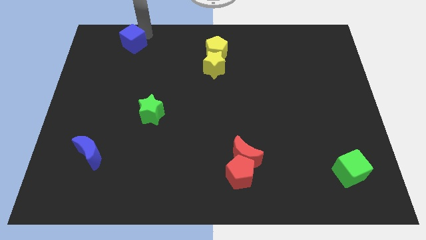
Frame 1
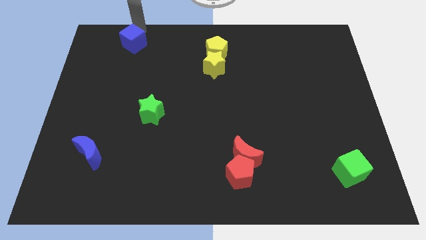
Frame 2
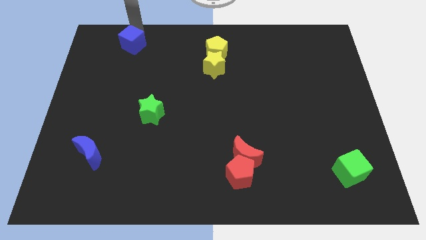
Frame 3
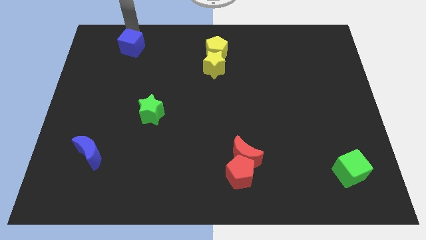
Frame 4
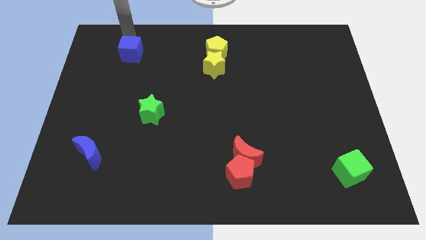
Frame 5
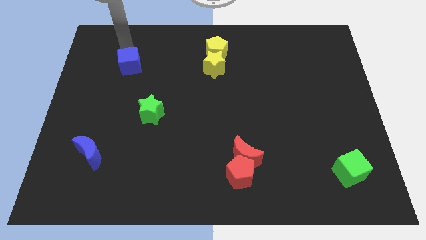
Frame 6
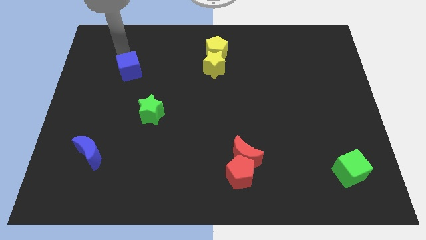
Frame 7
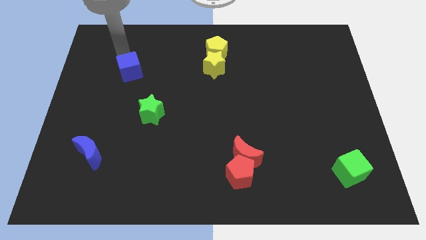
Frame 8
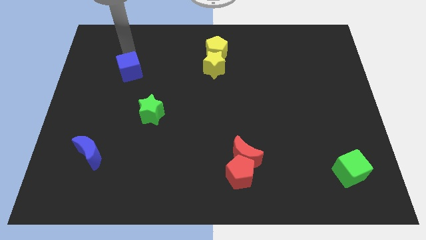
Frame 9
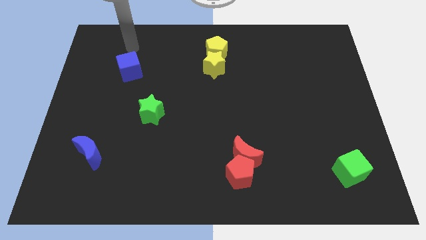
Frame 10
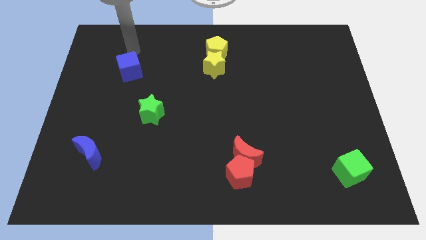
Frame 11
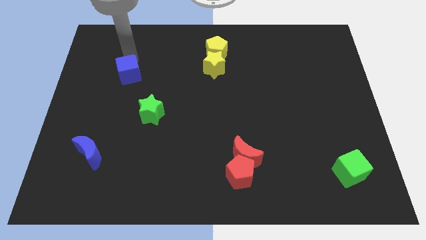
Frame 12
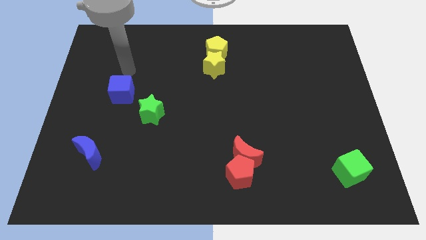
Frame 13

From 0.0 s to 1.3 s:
slide the blue cube towards the green star

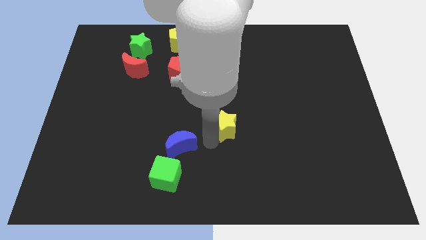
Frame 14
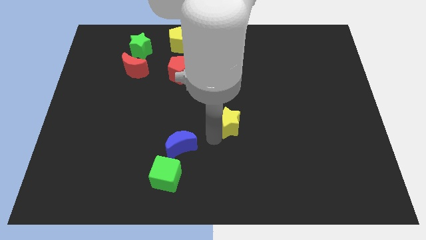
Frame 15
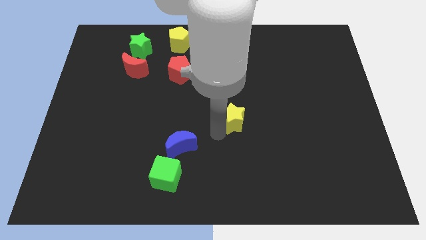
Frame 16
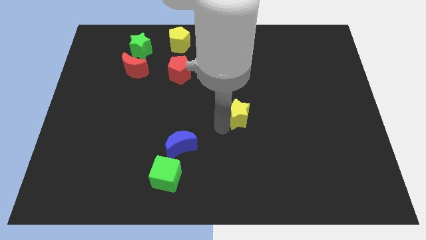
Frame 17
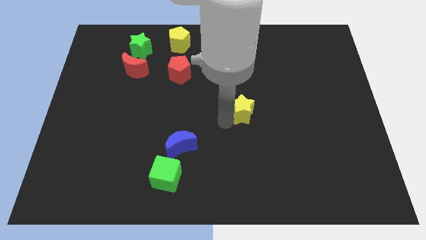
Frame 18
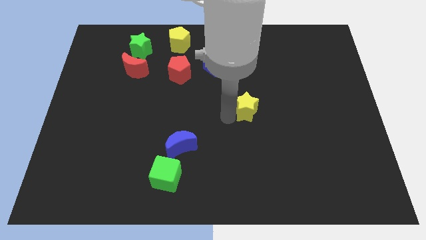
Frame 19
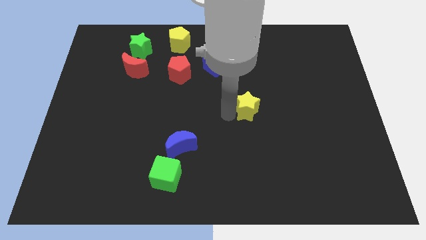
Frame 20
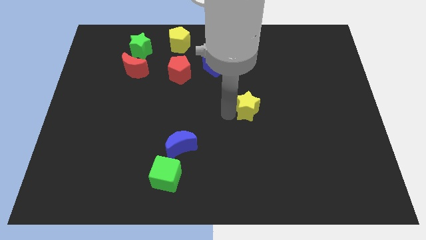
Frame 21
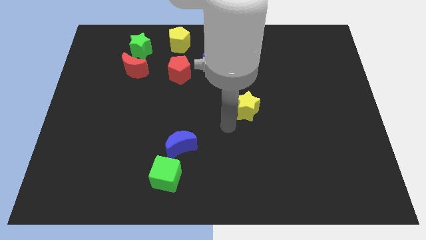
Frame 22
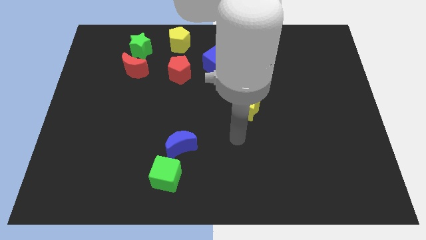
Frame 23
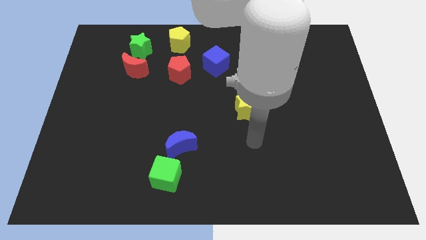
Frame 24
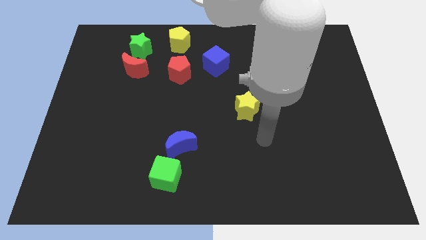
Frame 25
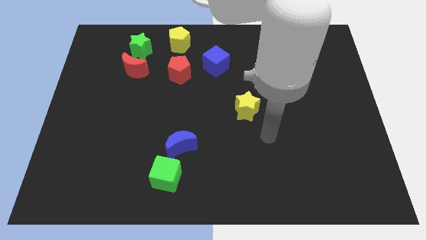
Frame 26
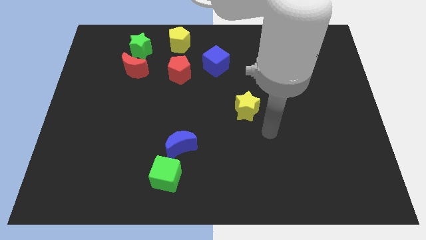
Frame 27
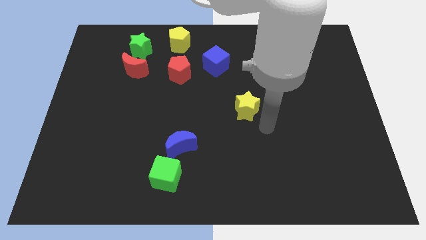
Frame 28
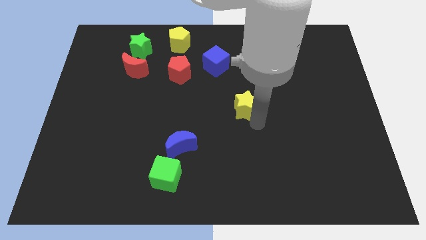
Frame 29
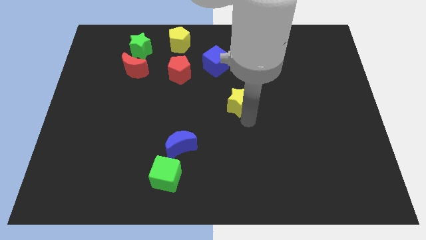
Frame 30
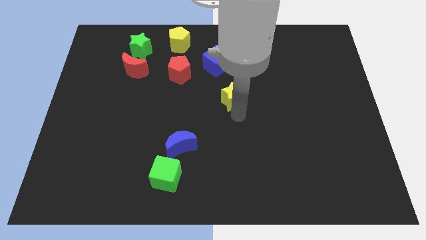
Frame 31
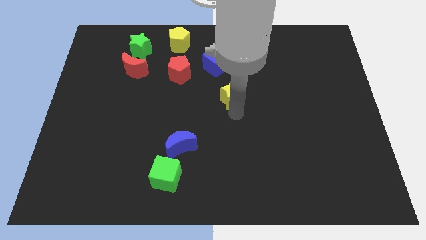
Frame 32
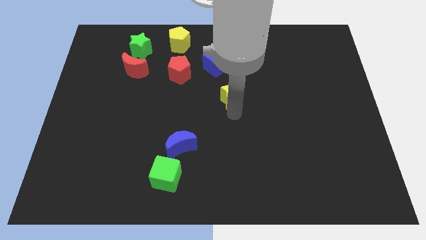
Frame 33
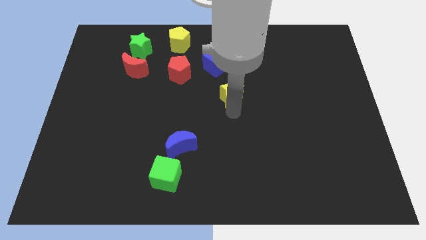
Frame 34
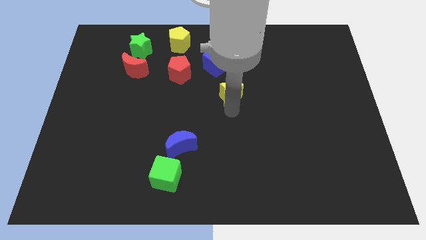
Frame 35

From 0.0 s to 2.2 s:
place the yellow star to the bottom of the blue cube

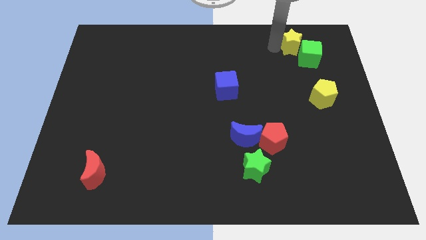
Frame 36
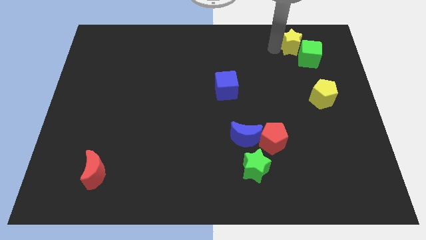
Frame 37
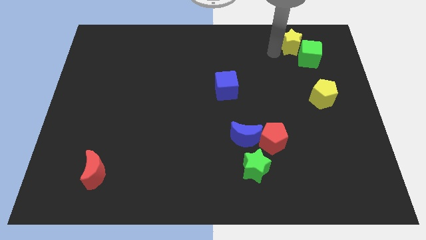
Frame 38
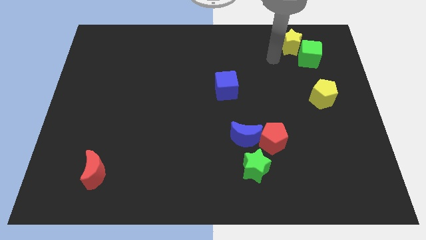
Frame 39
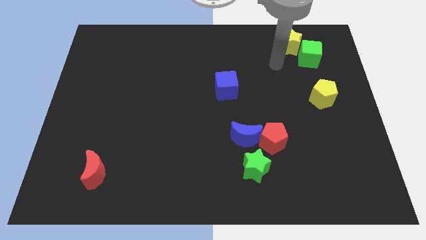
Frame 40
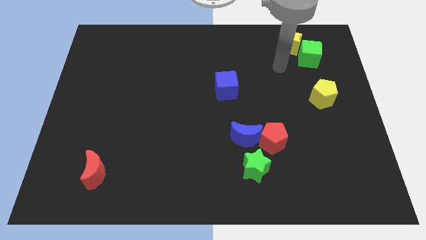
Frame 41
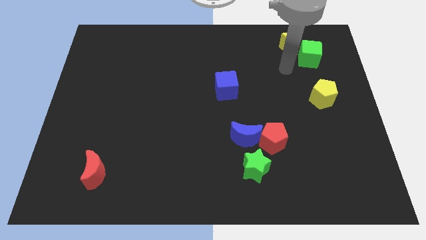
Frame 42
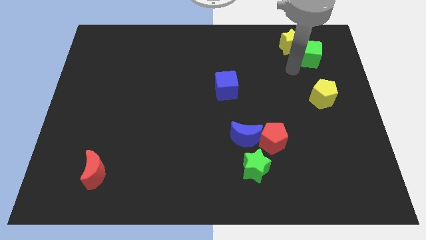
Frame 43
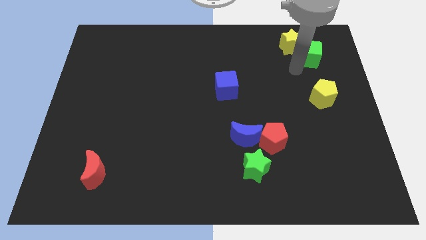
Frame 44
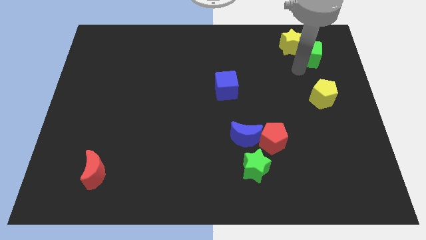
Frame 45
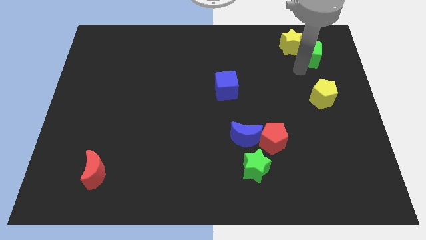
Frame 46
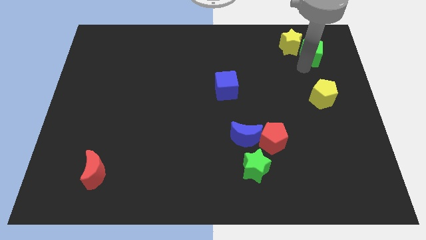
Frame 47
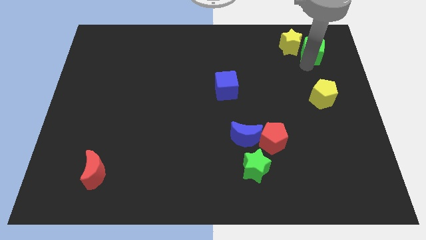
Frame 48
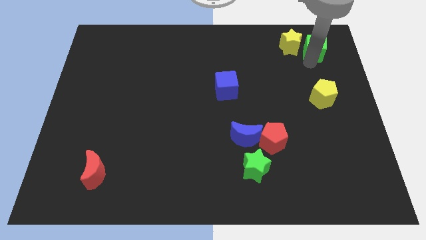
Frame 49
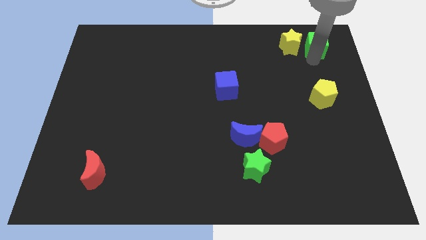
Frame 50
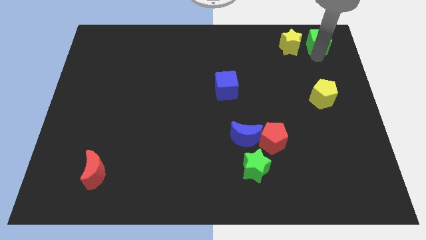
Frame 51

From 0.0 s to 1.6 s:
put the green cube to the right side of the yellow star

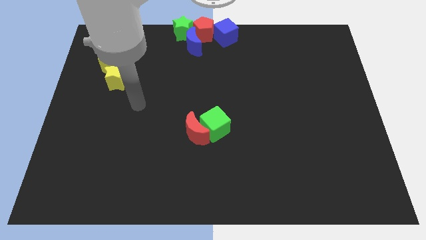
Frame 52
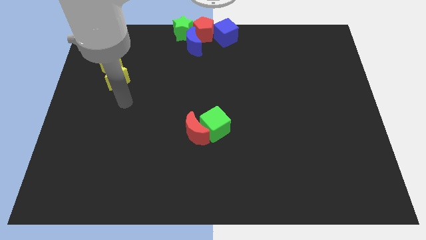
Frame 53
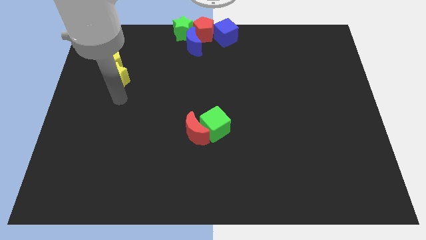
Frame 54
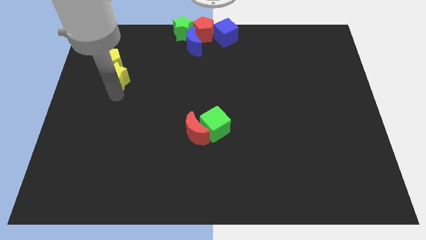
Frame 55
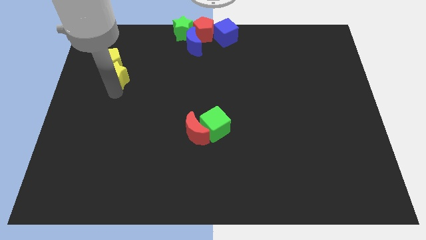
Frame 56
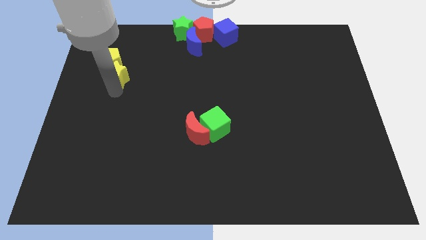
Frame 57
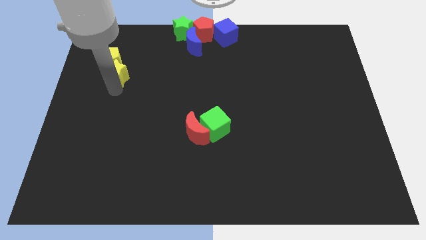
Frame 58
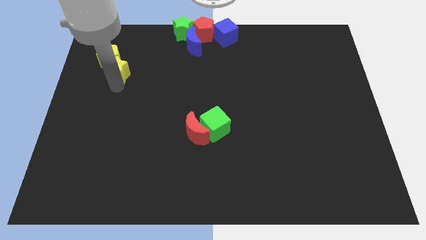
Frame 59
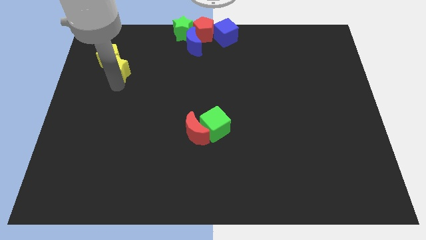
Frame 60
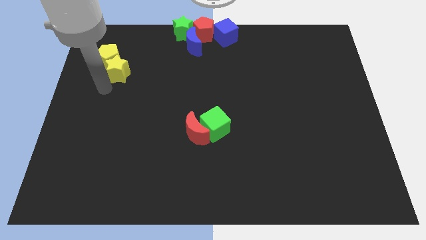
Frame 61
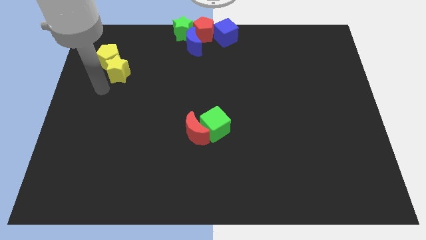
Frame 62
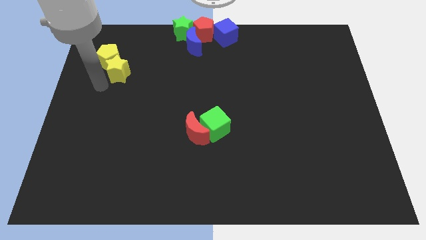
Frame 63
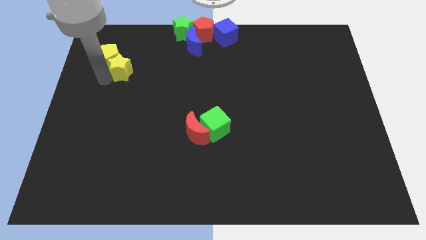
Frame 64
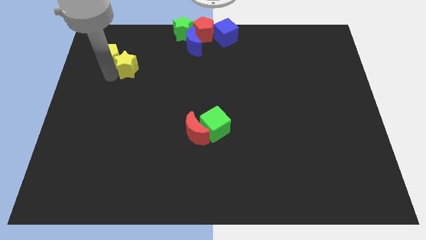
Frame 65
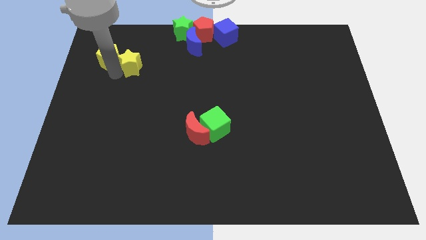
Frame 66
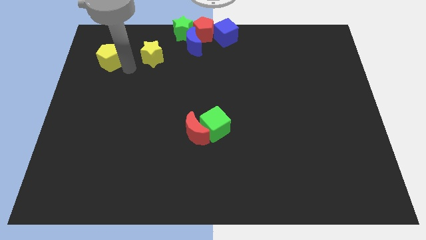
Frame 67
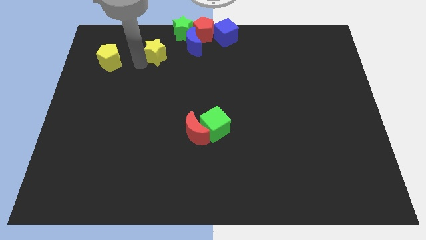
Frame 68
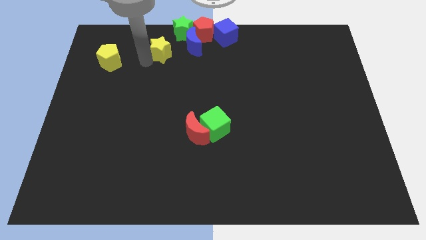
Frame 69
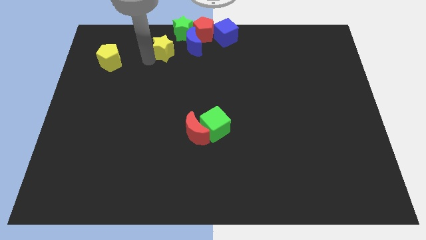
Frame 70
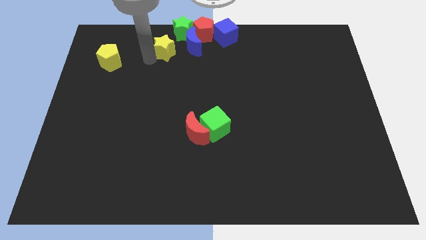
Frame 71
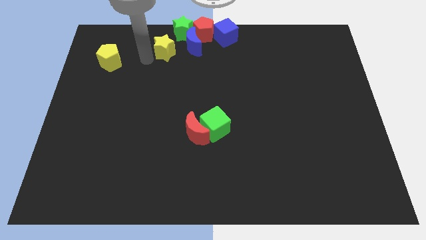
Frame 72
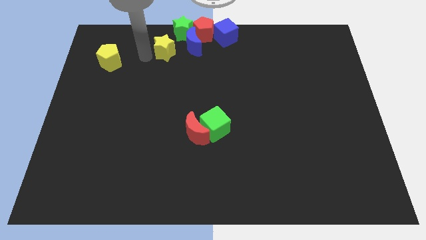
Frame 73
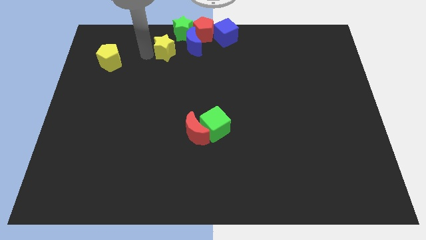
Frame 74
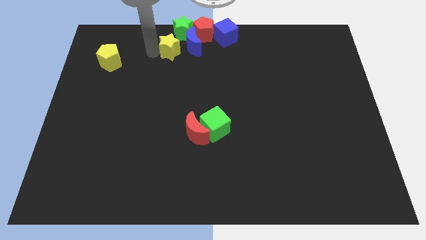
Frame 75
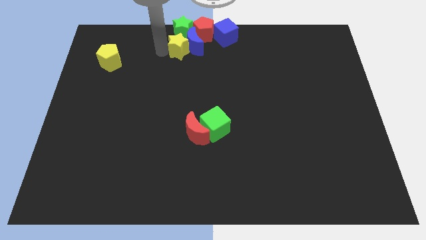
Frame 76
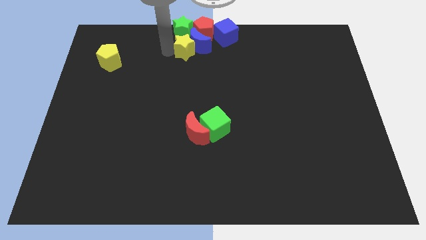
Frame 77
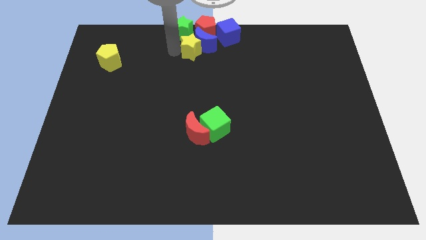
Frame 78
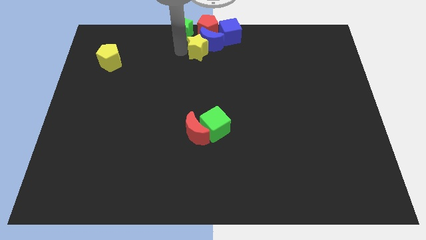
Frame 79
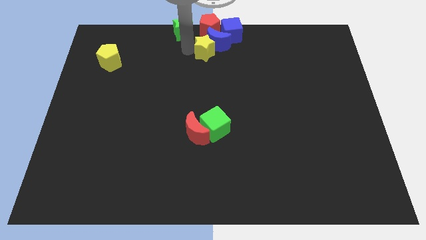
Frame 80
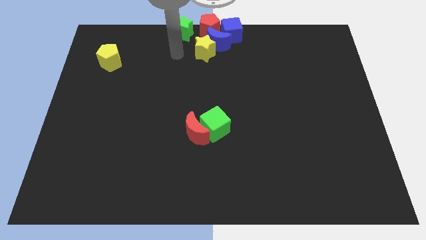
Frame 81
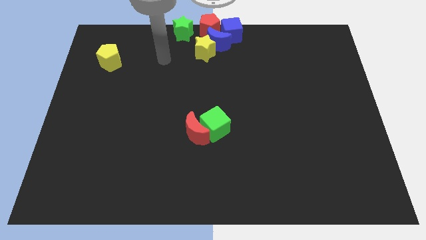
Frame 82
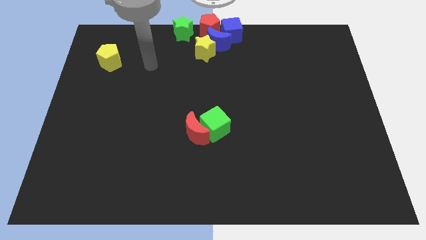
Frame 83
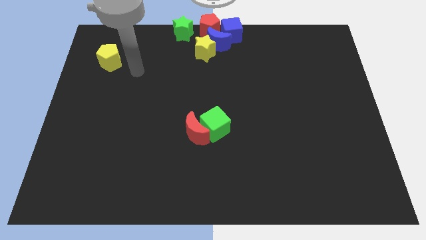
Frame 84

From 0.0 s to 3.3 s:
push the yellow star into blue moon

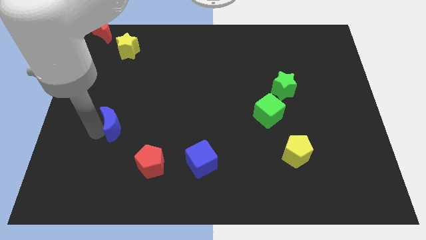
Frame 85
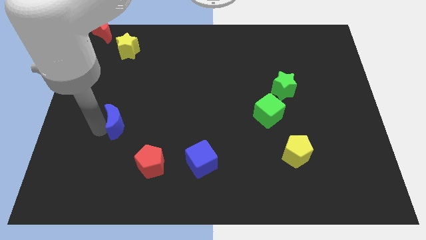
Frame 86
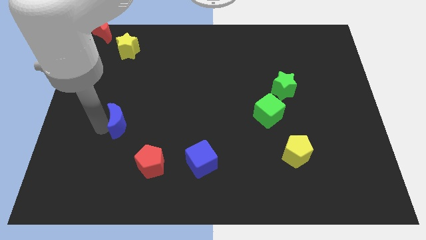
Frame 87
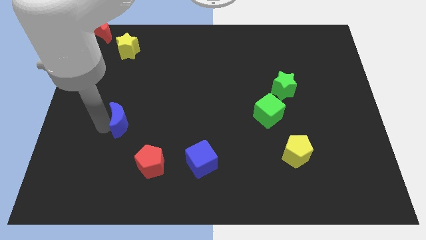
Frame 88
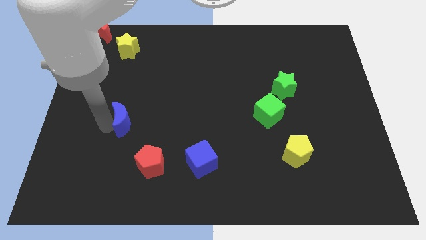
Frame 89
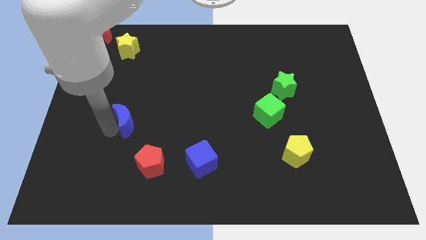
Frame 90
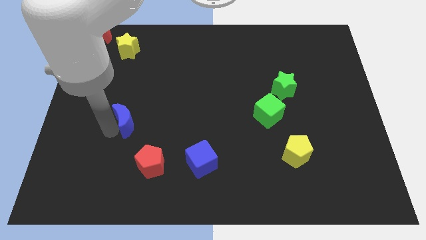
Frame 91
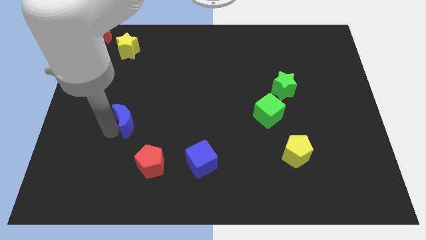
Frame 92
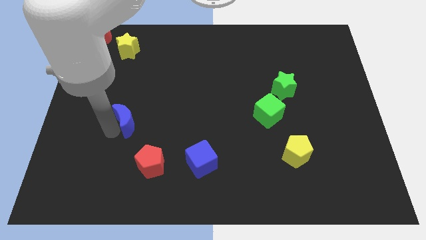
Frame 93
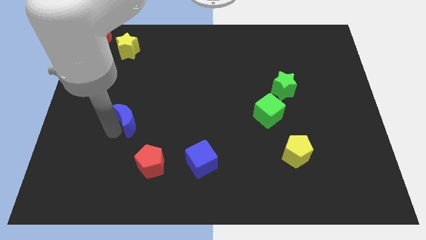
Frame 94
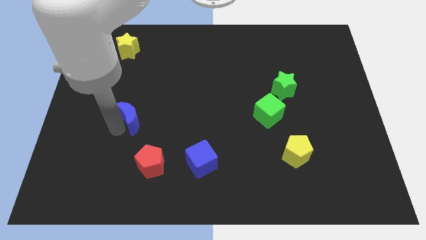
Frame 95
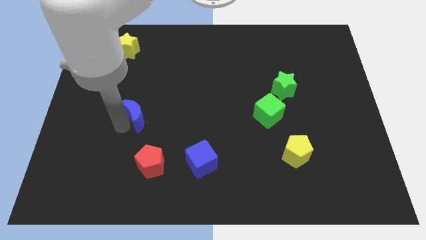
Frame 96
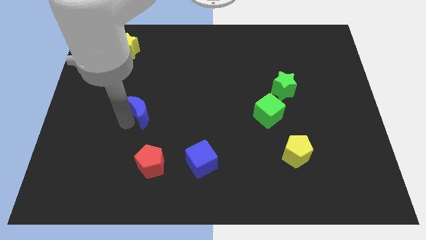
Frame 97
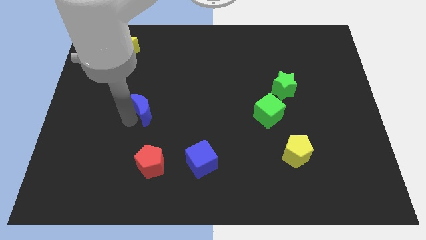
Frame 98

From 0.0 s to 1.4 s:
place blue crescent above red pentagon
